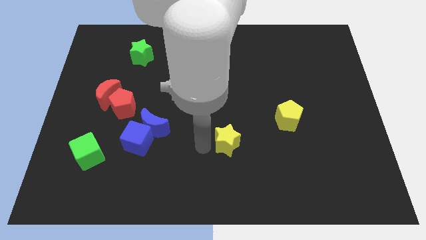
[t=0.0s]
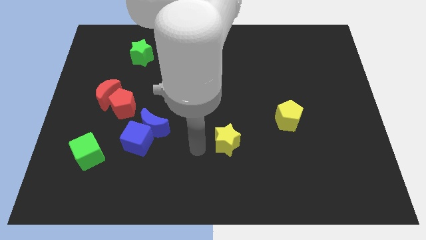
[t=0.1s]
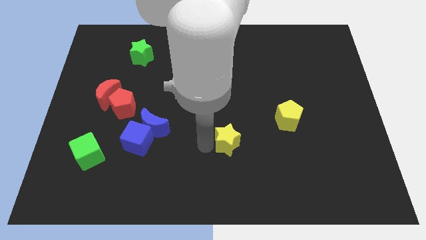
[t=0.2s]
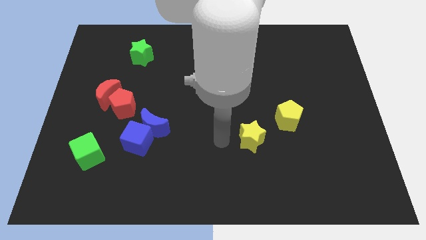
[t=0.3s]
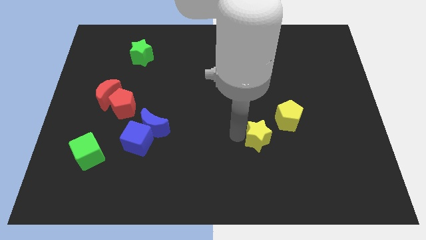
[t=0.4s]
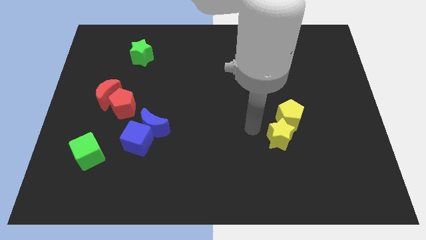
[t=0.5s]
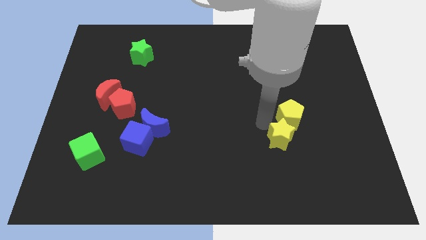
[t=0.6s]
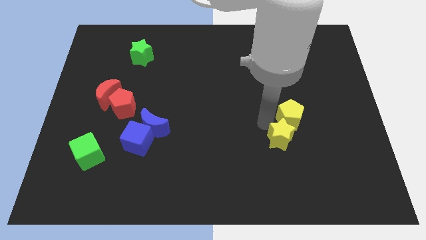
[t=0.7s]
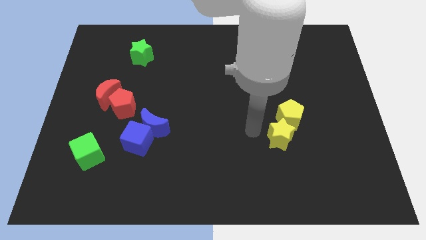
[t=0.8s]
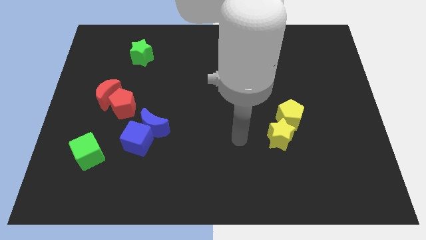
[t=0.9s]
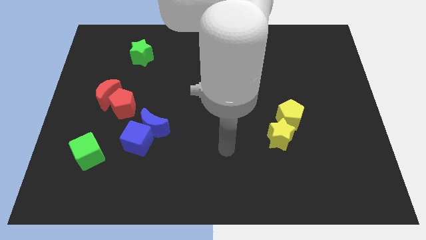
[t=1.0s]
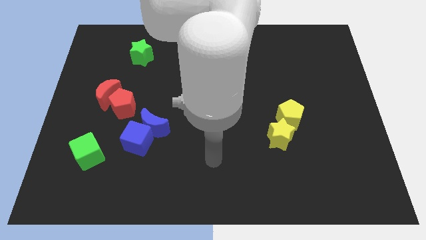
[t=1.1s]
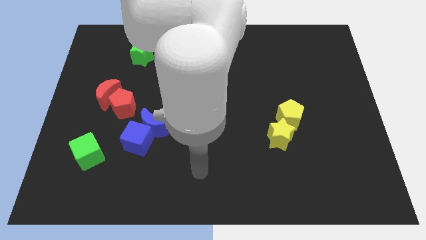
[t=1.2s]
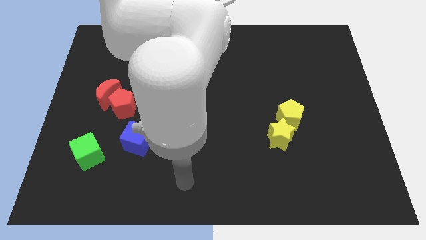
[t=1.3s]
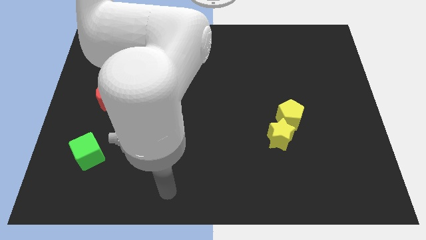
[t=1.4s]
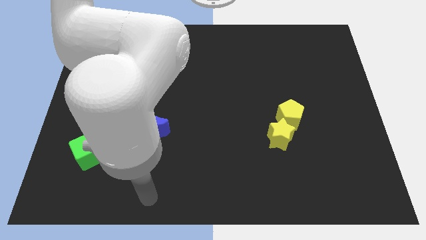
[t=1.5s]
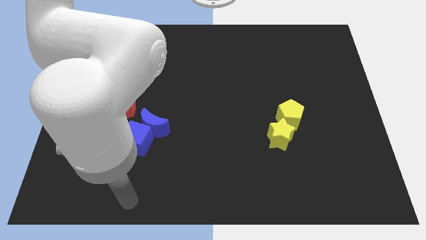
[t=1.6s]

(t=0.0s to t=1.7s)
attach the yellow star to the yellow pentgon

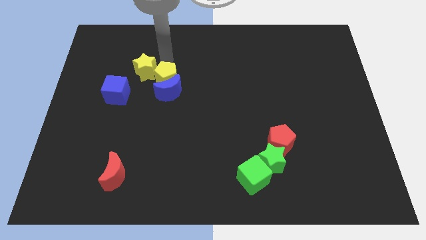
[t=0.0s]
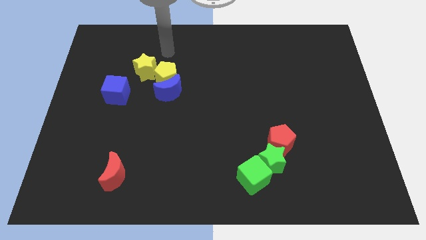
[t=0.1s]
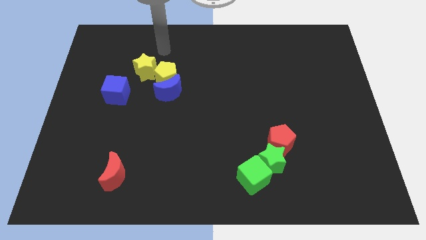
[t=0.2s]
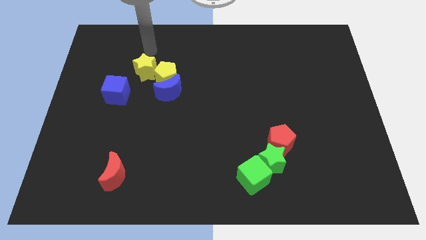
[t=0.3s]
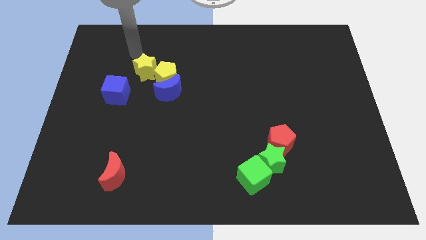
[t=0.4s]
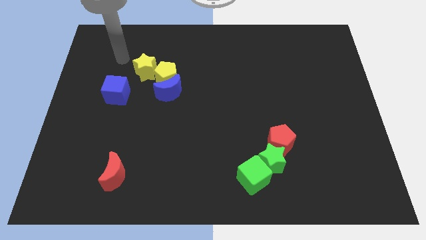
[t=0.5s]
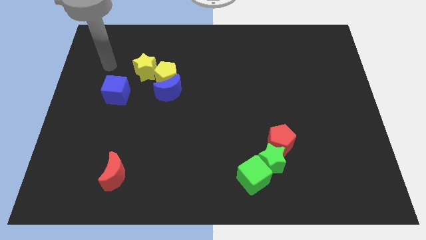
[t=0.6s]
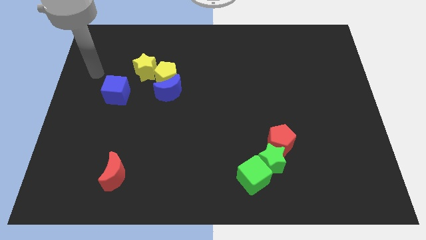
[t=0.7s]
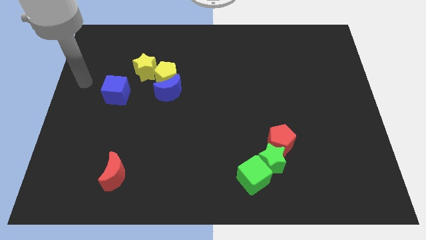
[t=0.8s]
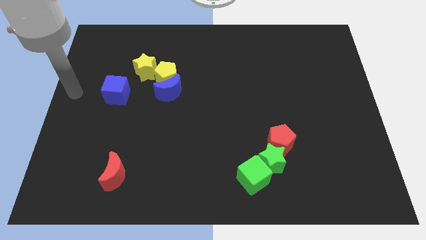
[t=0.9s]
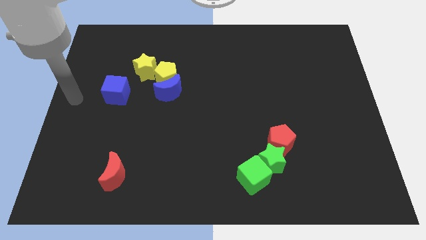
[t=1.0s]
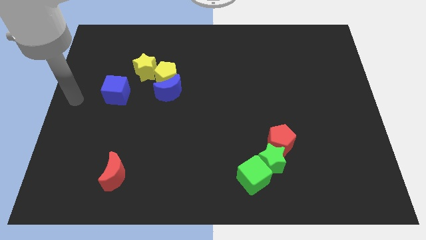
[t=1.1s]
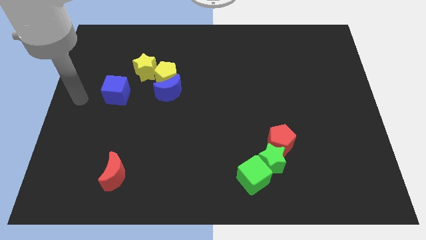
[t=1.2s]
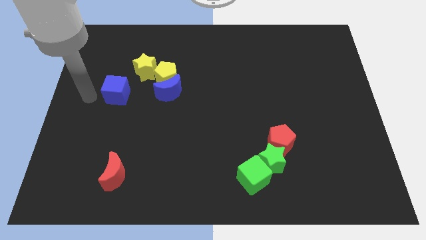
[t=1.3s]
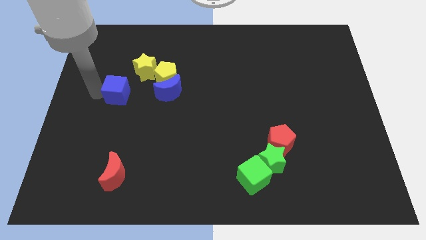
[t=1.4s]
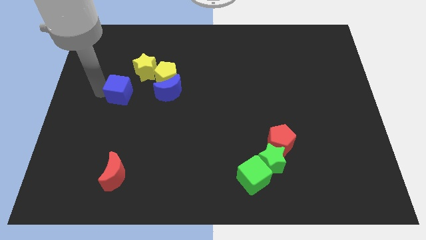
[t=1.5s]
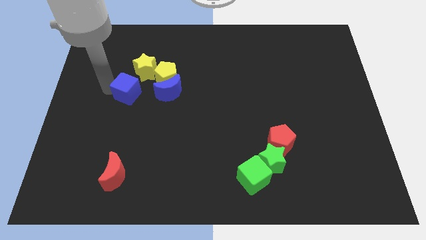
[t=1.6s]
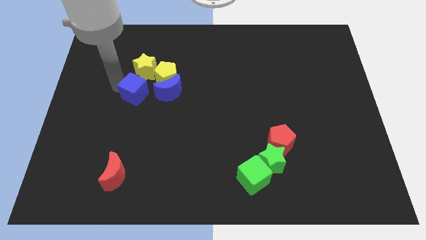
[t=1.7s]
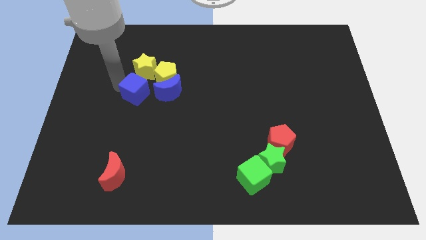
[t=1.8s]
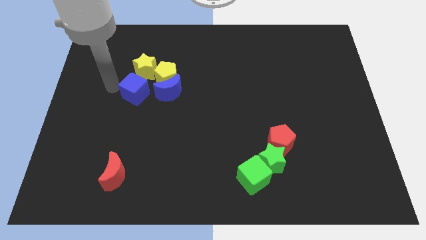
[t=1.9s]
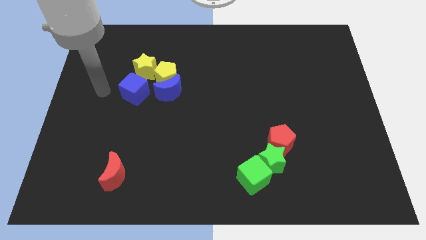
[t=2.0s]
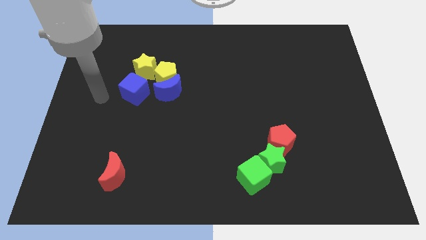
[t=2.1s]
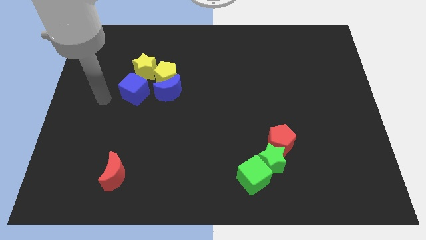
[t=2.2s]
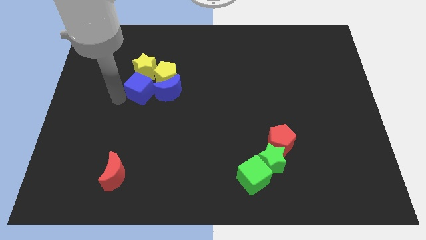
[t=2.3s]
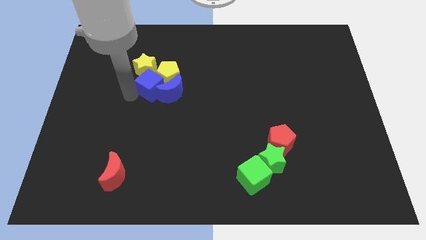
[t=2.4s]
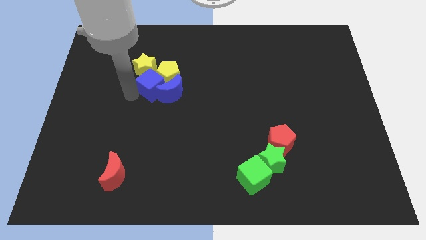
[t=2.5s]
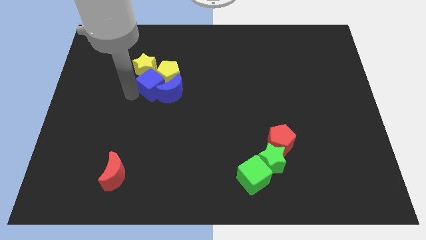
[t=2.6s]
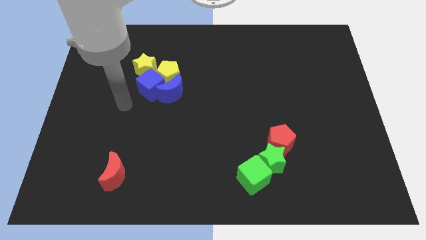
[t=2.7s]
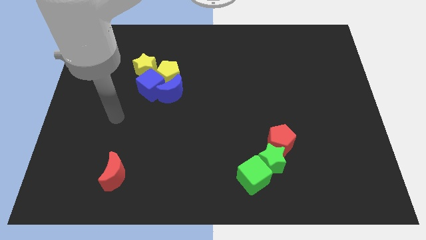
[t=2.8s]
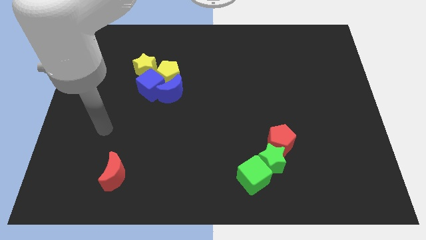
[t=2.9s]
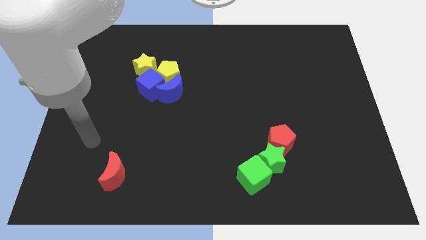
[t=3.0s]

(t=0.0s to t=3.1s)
move the blue cube into the group of blocks

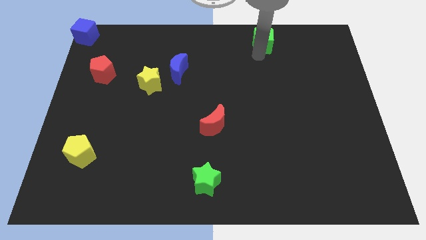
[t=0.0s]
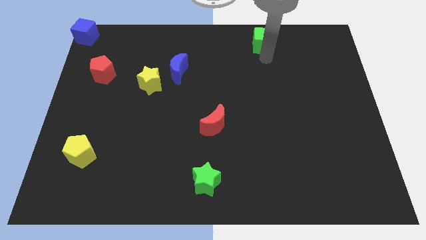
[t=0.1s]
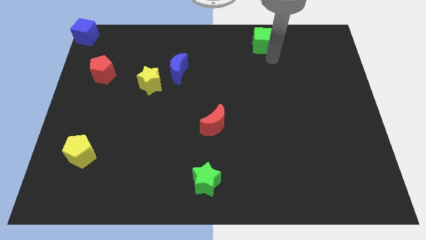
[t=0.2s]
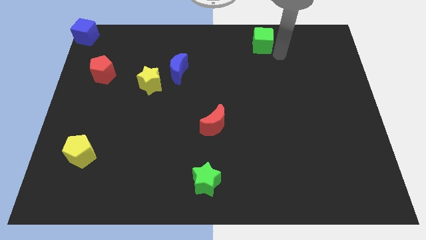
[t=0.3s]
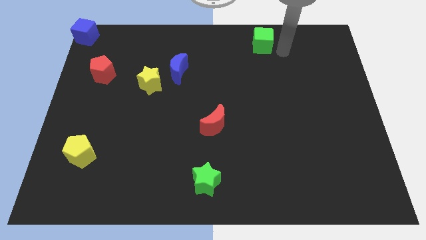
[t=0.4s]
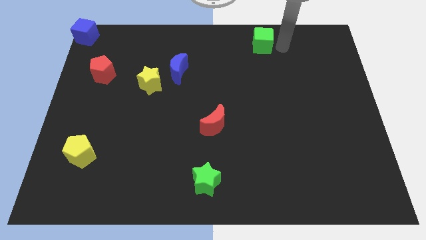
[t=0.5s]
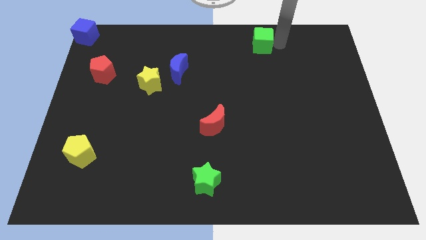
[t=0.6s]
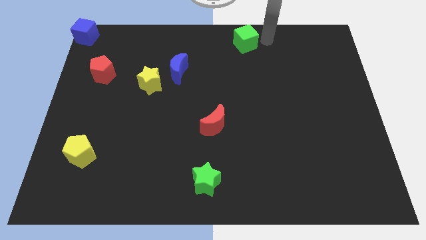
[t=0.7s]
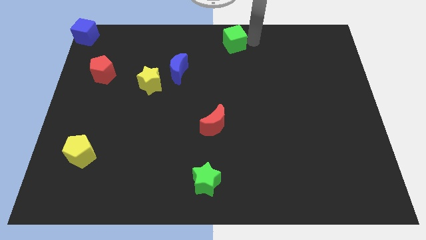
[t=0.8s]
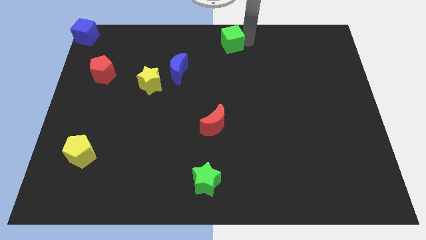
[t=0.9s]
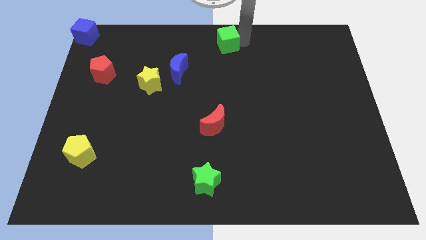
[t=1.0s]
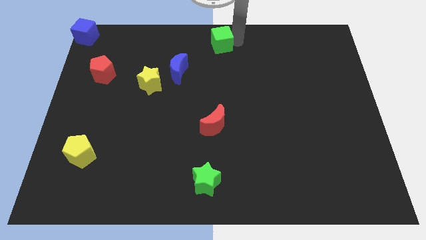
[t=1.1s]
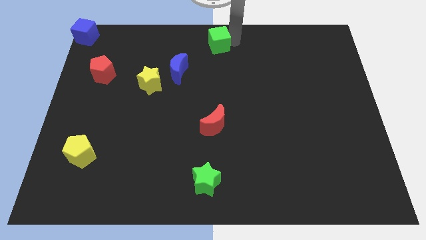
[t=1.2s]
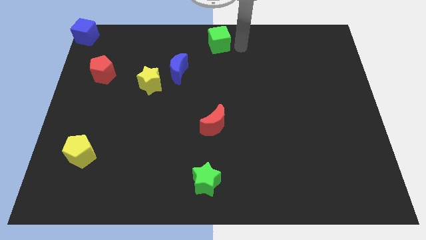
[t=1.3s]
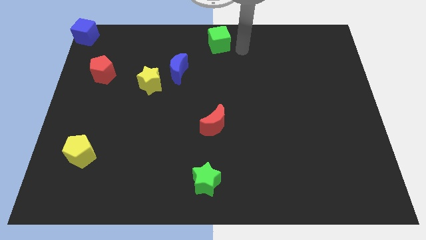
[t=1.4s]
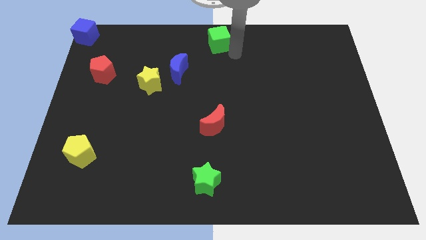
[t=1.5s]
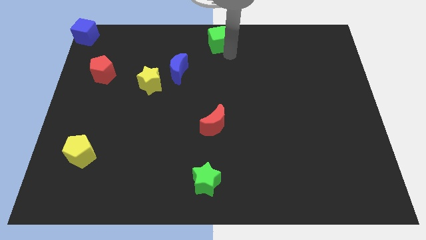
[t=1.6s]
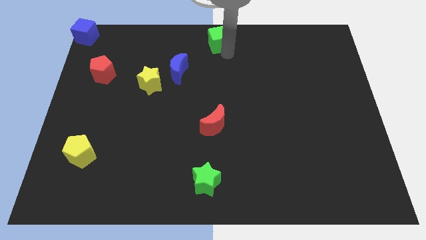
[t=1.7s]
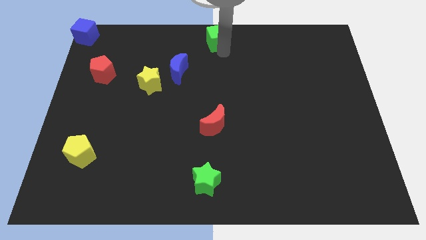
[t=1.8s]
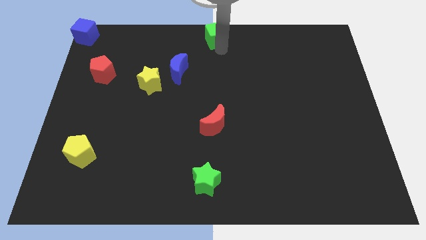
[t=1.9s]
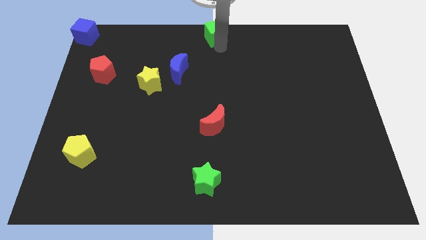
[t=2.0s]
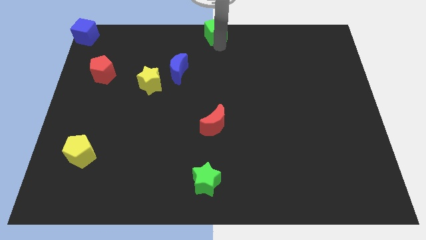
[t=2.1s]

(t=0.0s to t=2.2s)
push the green cube to the top center

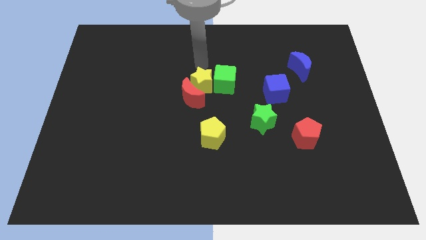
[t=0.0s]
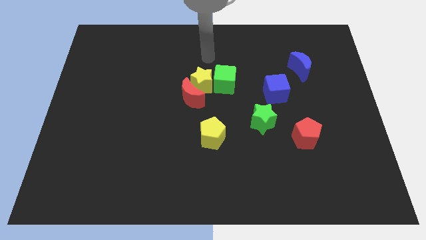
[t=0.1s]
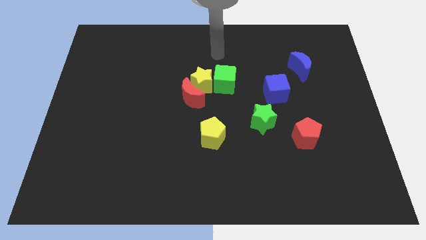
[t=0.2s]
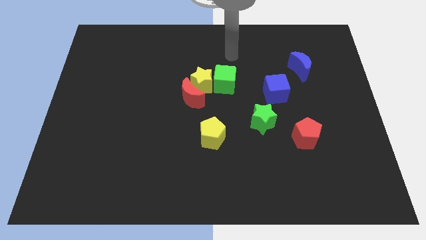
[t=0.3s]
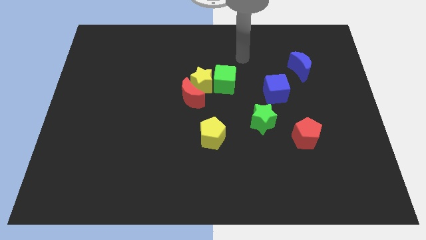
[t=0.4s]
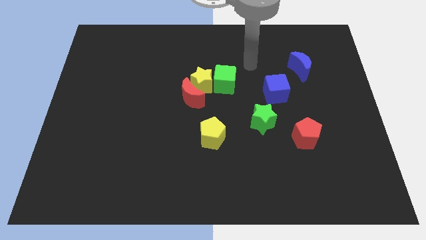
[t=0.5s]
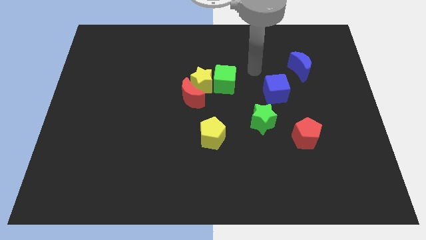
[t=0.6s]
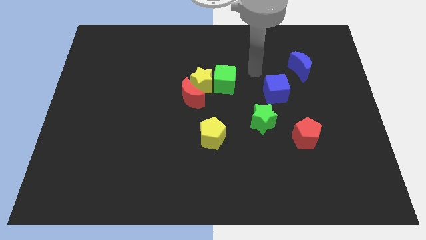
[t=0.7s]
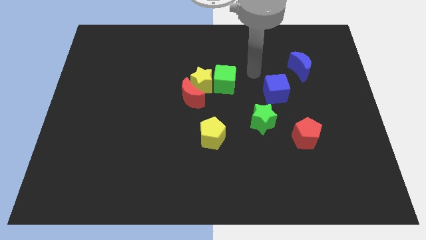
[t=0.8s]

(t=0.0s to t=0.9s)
move away from yellow star

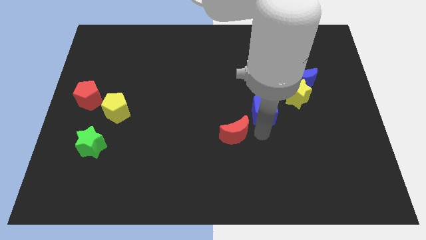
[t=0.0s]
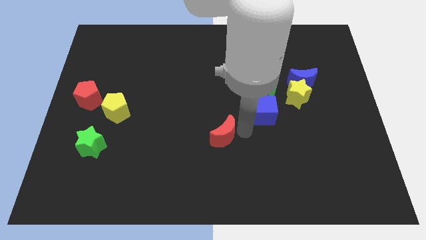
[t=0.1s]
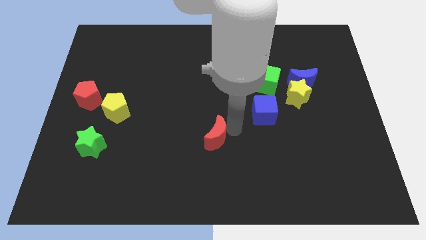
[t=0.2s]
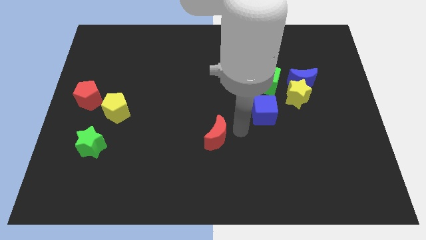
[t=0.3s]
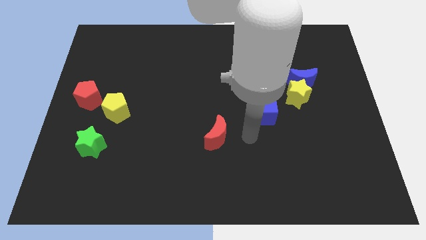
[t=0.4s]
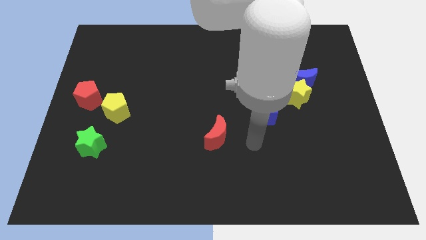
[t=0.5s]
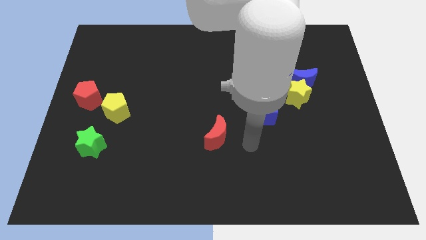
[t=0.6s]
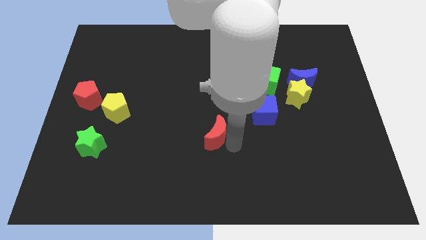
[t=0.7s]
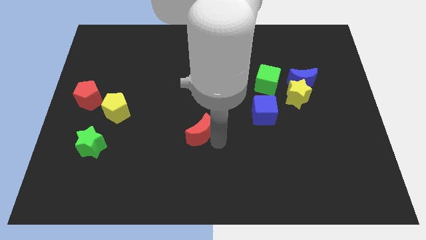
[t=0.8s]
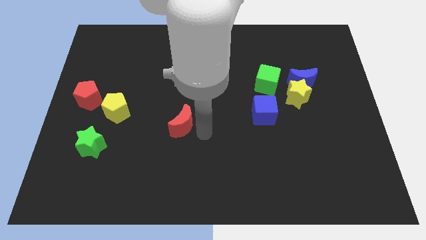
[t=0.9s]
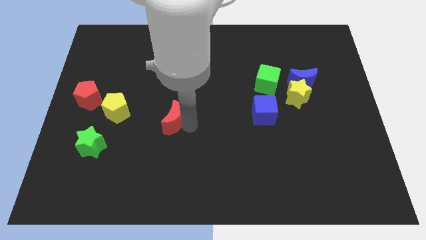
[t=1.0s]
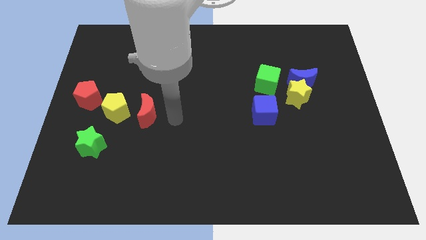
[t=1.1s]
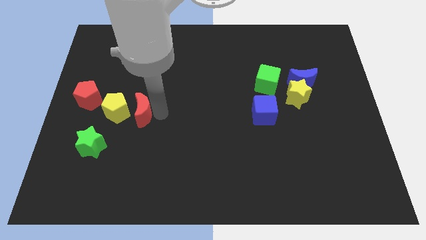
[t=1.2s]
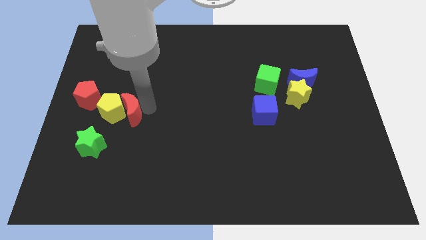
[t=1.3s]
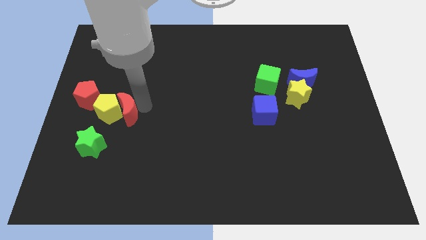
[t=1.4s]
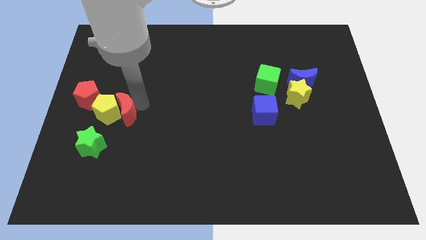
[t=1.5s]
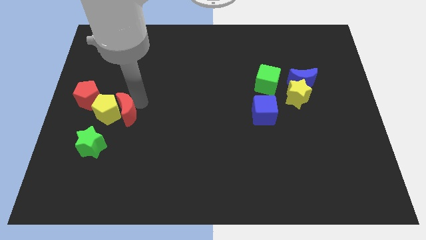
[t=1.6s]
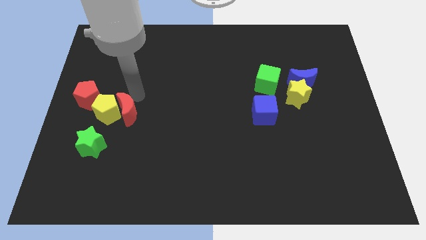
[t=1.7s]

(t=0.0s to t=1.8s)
move the red moon to the left of the yellow pentagon
